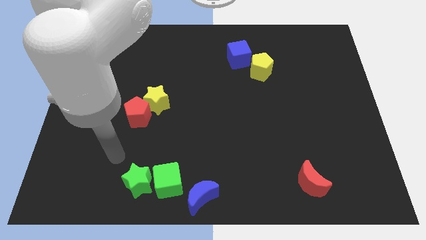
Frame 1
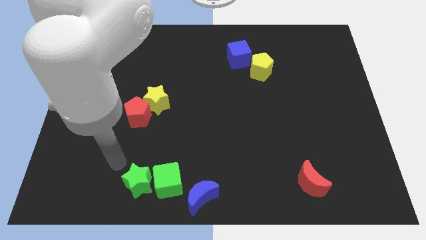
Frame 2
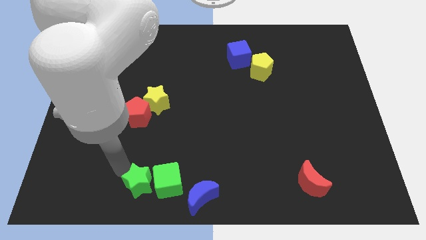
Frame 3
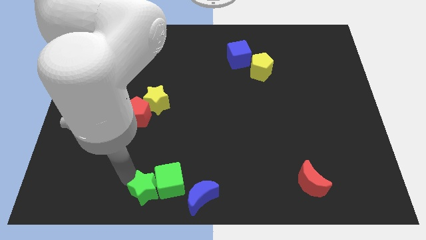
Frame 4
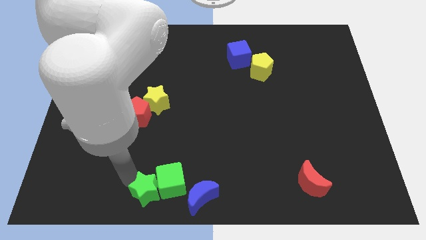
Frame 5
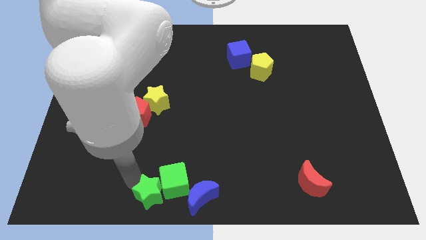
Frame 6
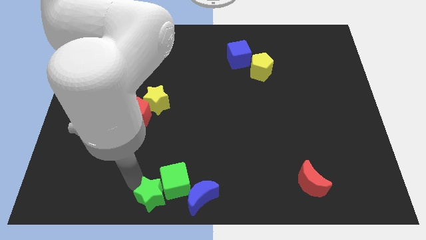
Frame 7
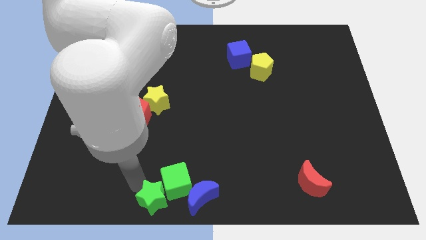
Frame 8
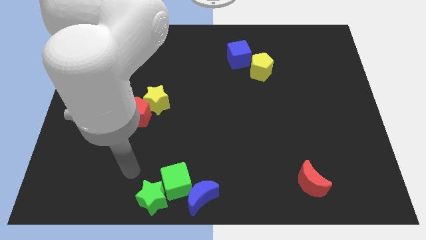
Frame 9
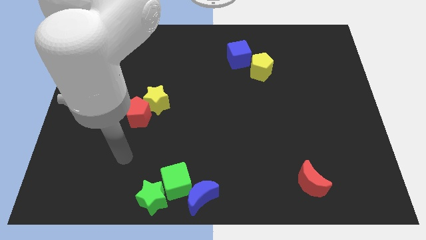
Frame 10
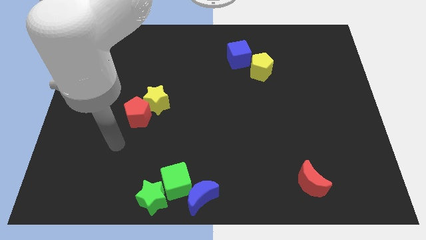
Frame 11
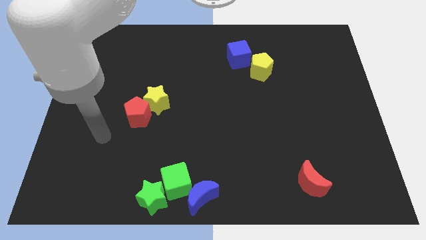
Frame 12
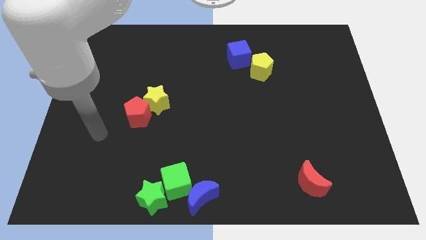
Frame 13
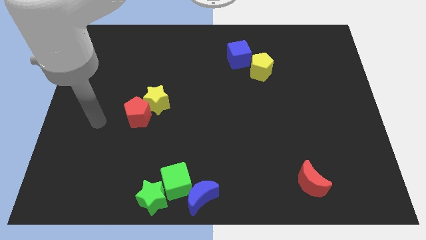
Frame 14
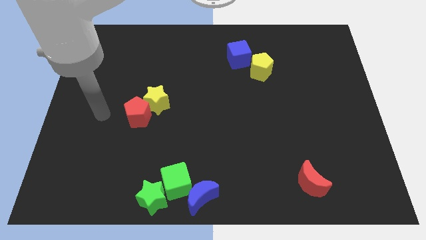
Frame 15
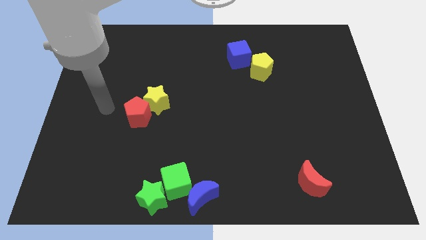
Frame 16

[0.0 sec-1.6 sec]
push green cube and star close to the blue crescent

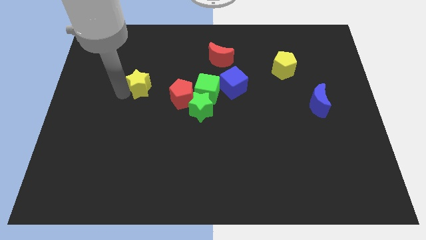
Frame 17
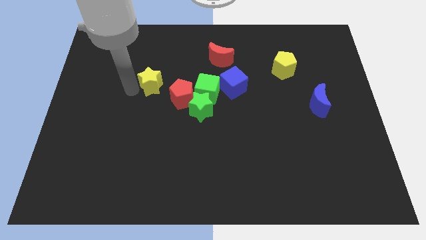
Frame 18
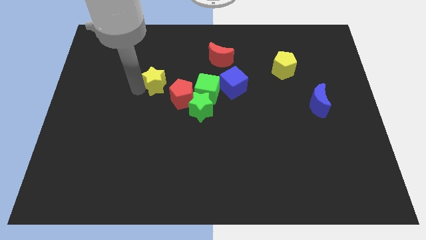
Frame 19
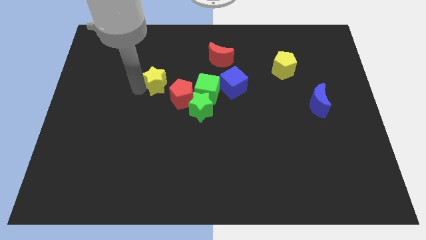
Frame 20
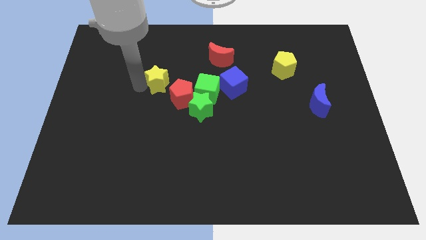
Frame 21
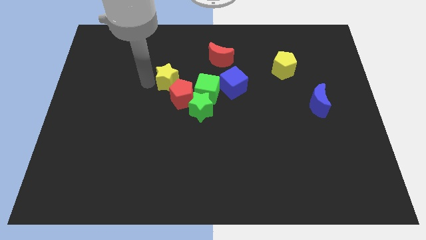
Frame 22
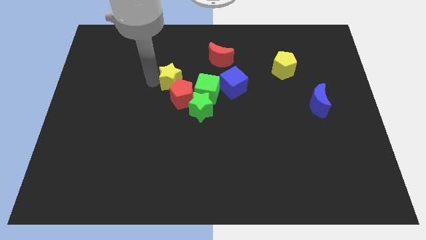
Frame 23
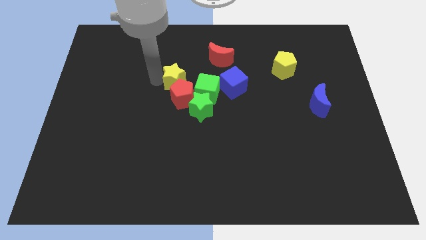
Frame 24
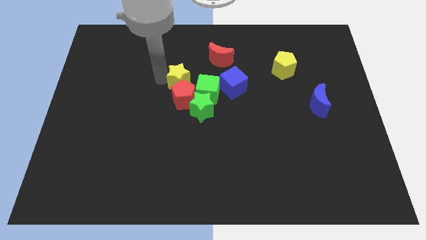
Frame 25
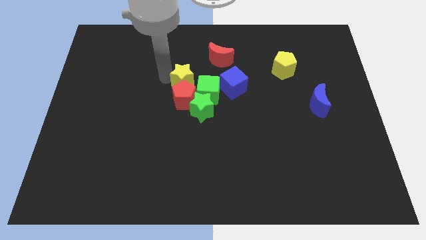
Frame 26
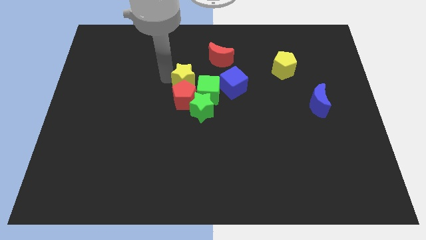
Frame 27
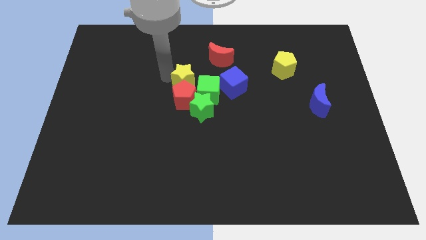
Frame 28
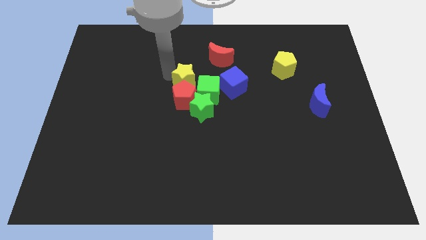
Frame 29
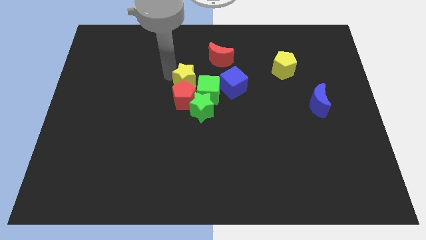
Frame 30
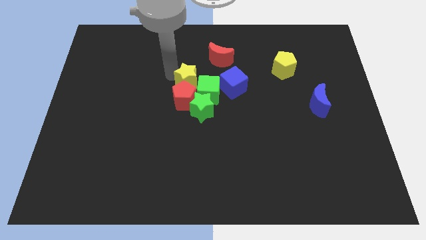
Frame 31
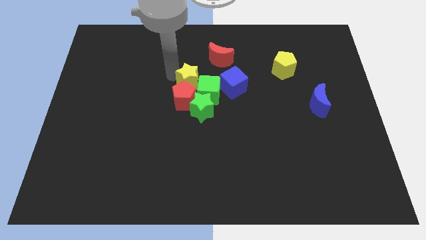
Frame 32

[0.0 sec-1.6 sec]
place the yellow star above to the red pentagon

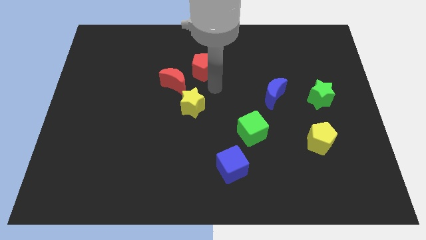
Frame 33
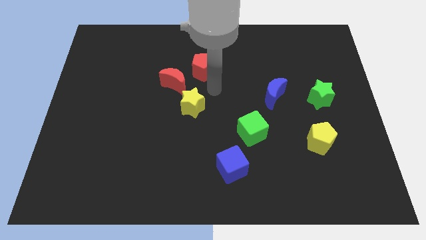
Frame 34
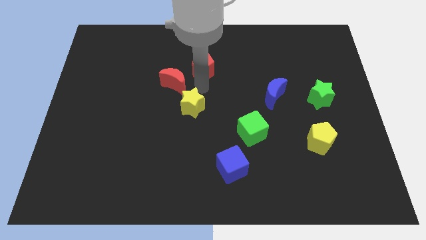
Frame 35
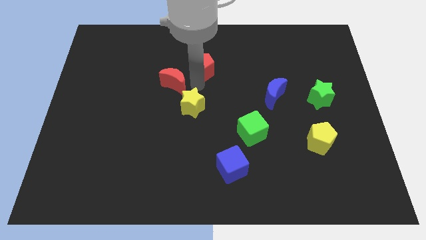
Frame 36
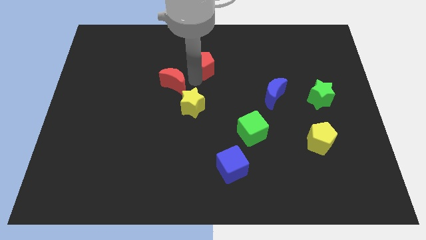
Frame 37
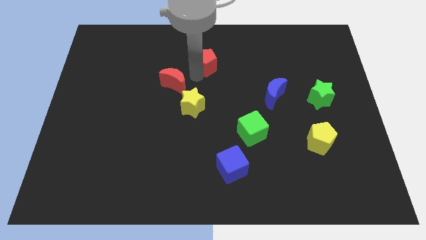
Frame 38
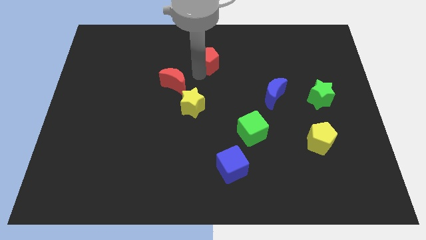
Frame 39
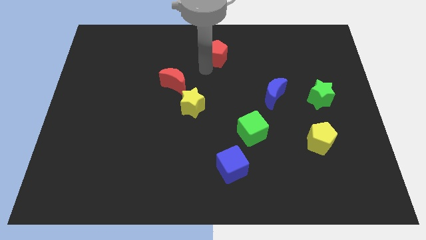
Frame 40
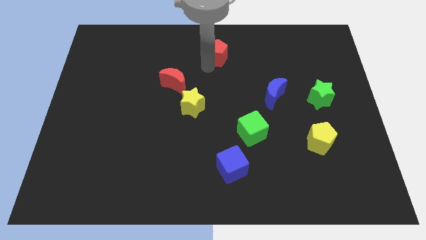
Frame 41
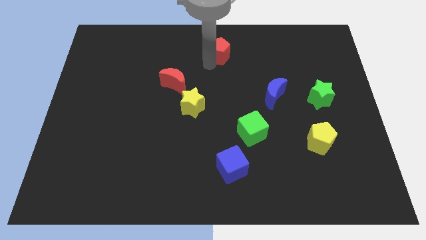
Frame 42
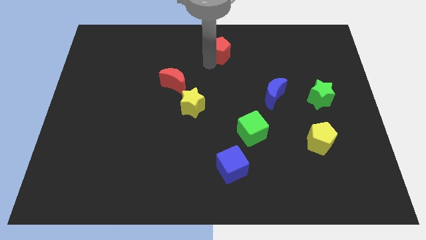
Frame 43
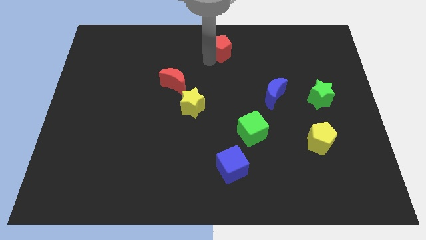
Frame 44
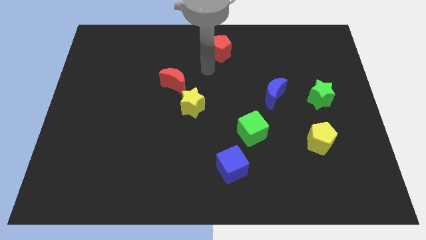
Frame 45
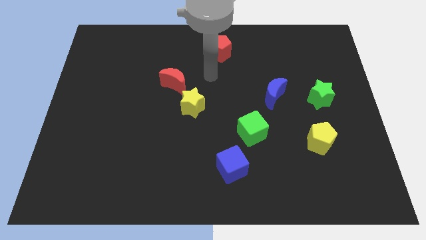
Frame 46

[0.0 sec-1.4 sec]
push the red pentagon slightly towards the top center

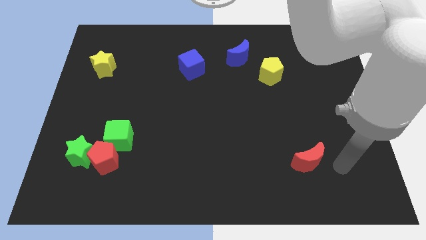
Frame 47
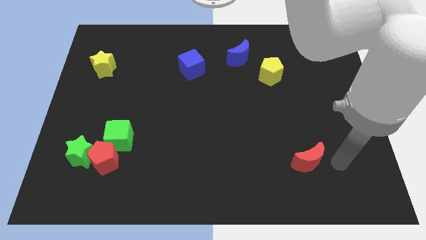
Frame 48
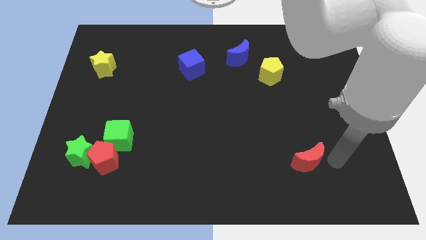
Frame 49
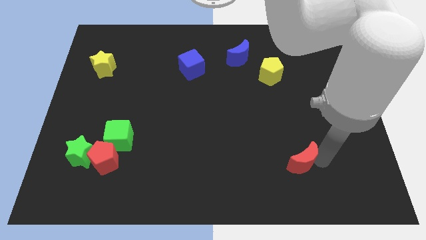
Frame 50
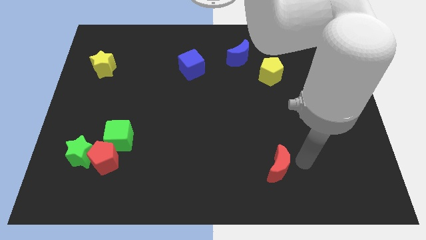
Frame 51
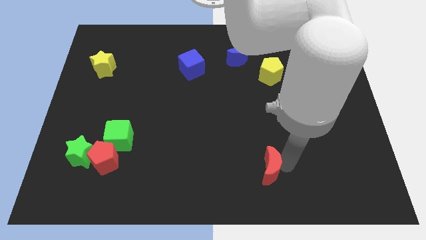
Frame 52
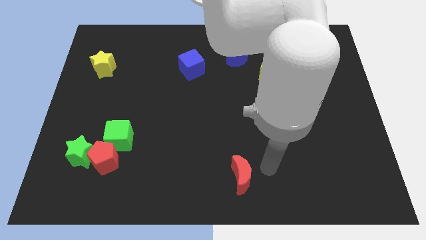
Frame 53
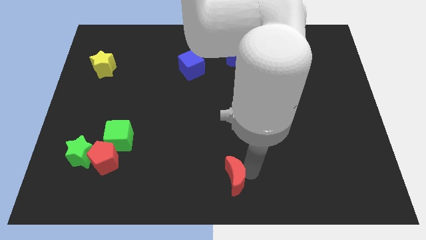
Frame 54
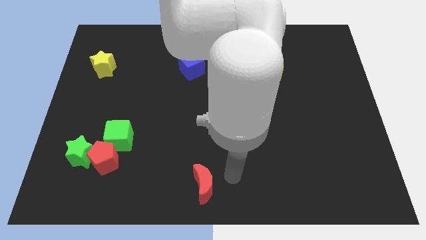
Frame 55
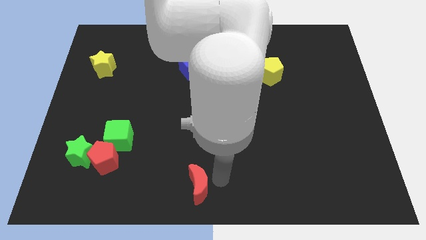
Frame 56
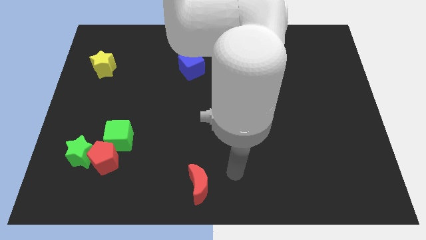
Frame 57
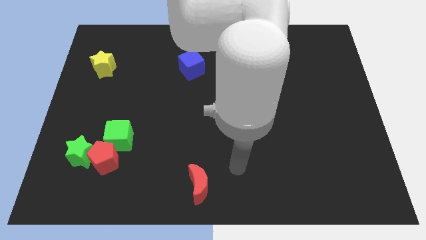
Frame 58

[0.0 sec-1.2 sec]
move the red moon to the left side

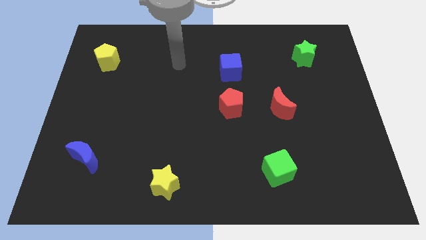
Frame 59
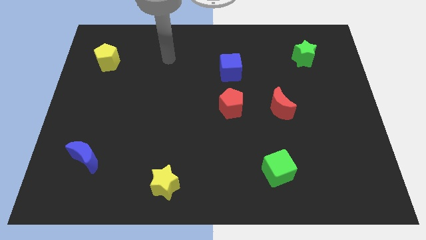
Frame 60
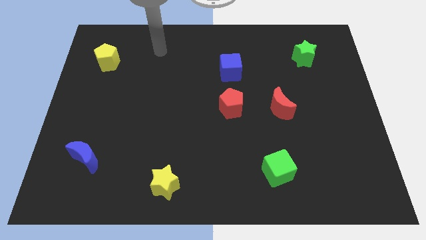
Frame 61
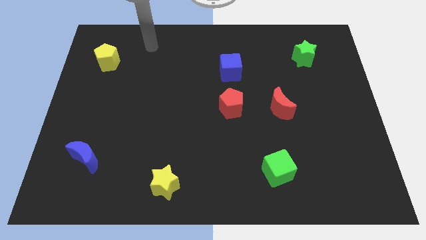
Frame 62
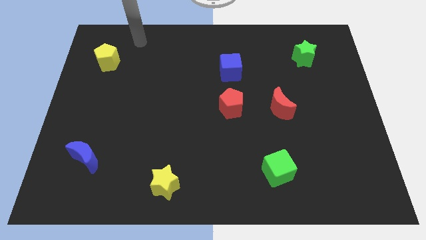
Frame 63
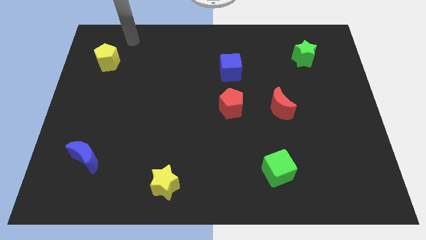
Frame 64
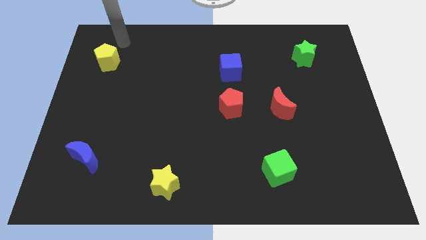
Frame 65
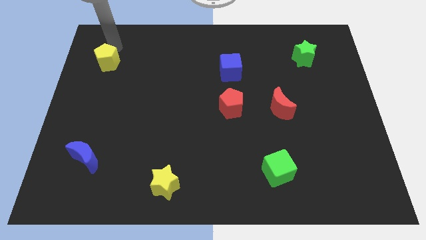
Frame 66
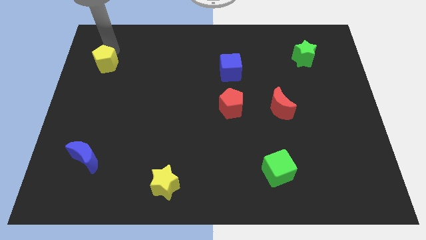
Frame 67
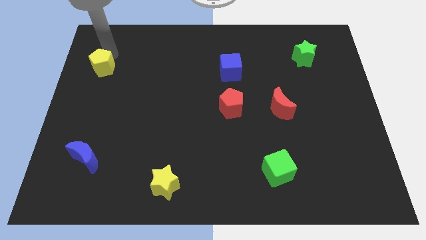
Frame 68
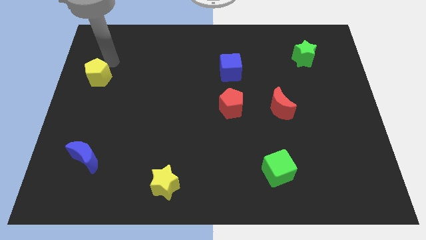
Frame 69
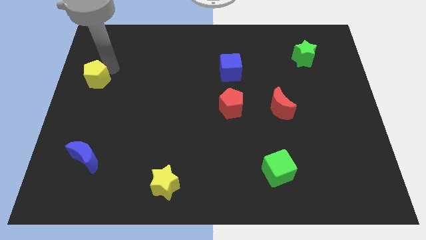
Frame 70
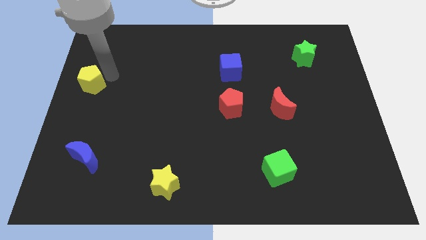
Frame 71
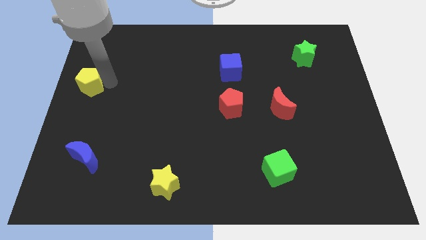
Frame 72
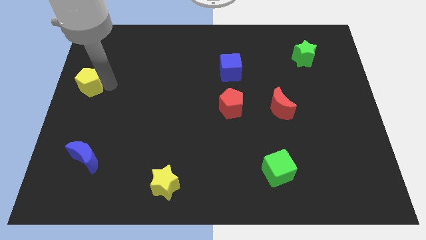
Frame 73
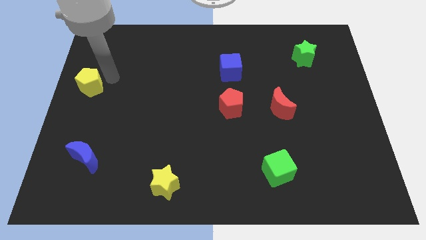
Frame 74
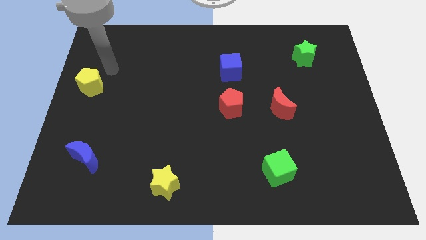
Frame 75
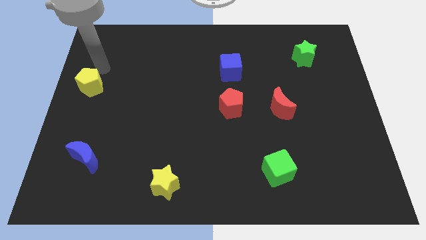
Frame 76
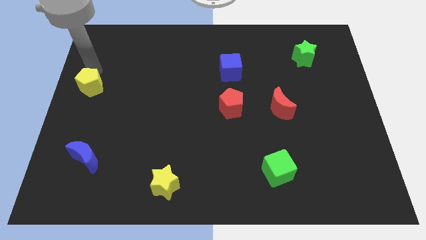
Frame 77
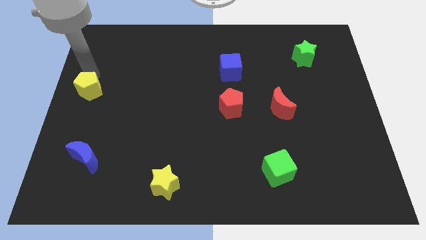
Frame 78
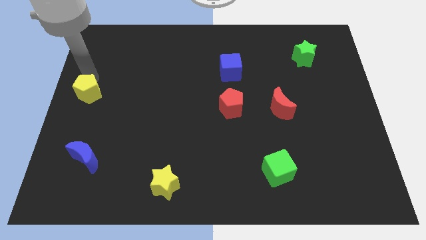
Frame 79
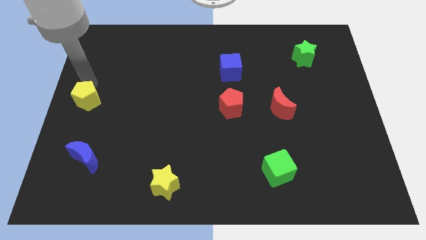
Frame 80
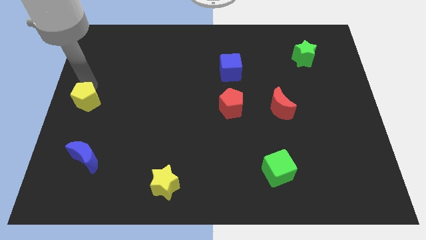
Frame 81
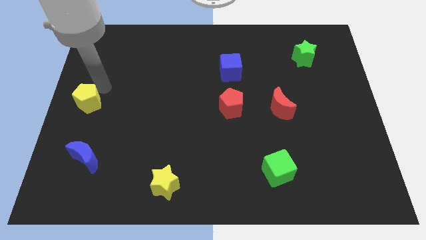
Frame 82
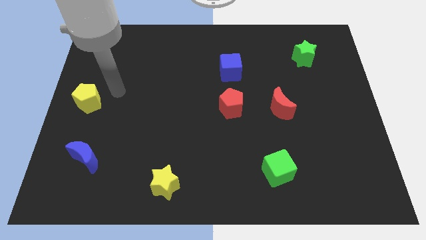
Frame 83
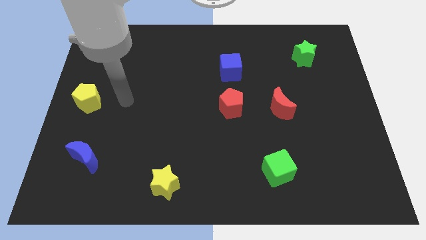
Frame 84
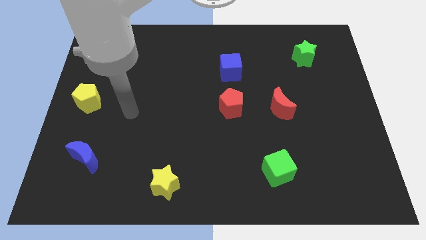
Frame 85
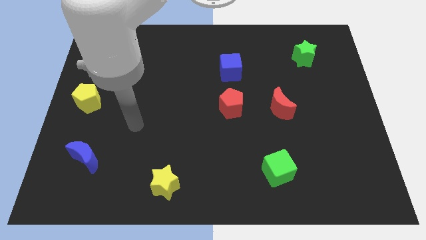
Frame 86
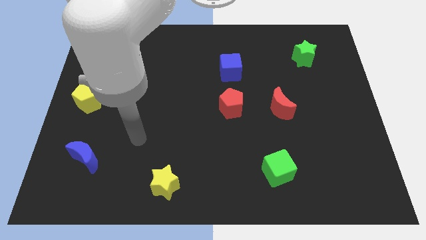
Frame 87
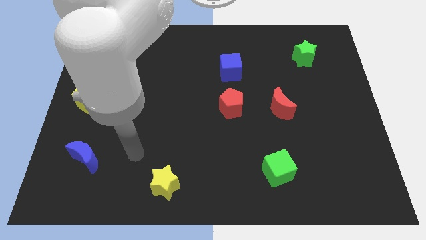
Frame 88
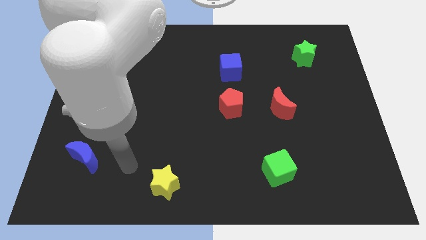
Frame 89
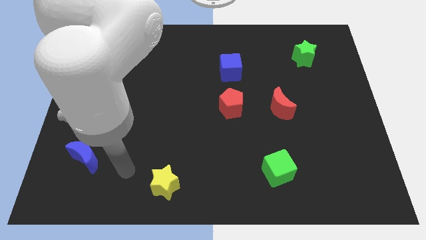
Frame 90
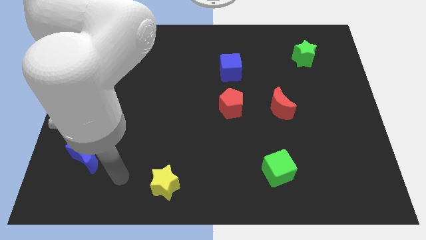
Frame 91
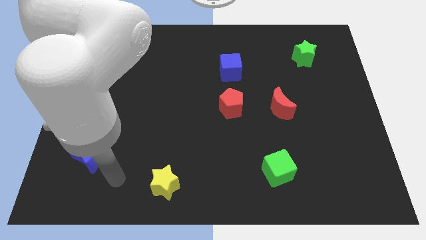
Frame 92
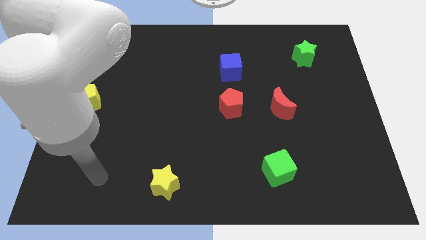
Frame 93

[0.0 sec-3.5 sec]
push the yellow pentagon towards blue moon
